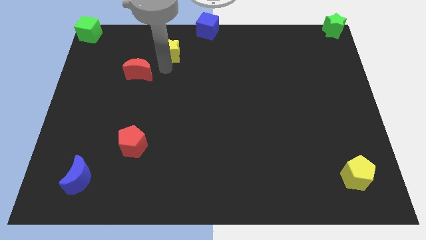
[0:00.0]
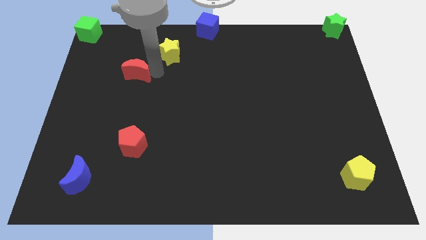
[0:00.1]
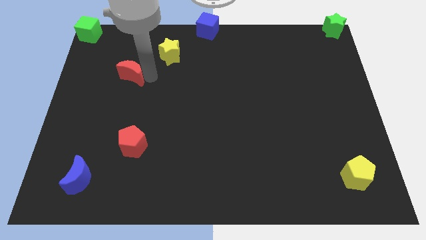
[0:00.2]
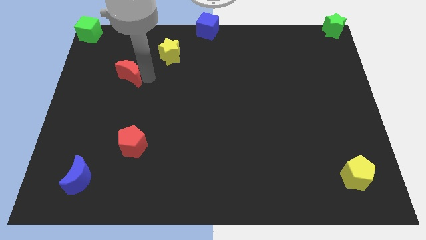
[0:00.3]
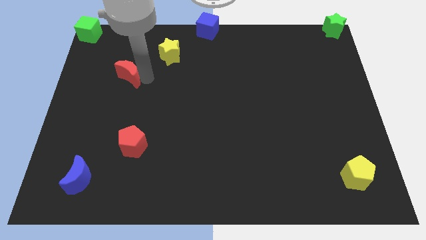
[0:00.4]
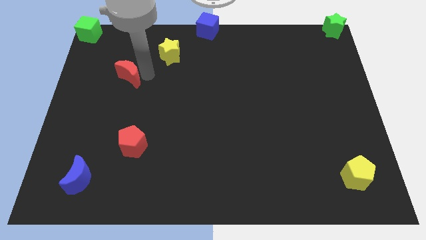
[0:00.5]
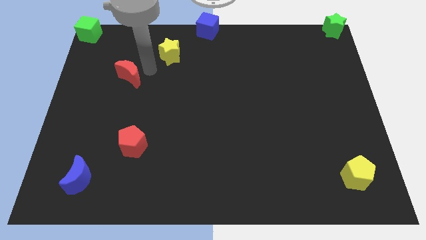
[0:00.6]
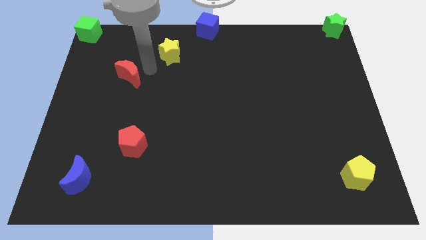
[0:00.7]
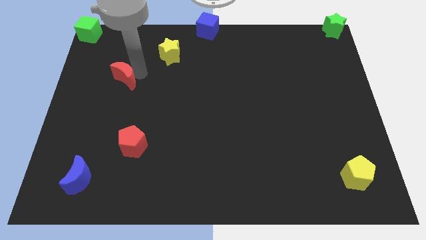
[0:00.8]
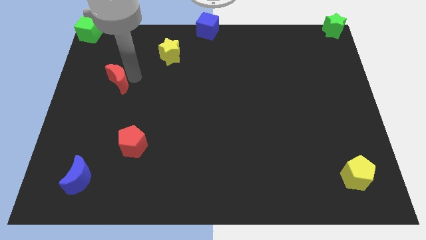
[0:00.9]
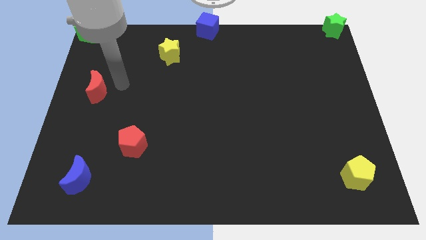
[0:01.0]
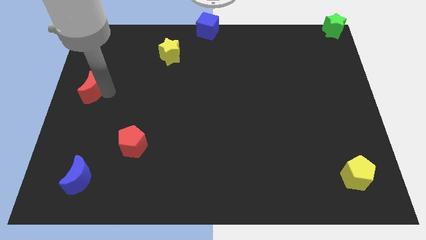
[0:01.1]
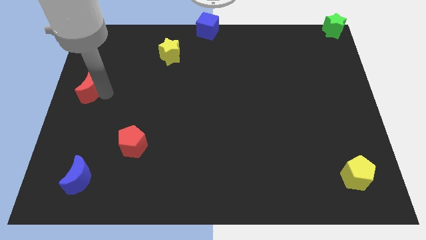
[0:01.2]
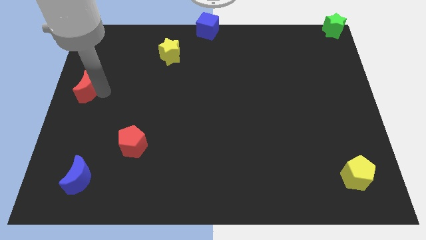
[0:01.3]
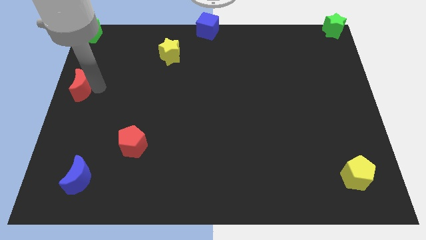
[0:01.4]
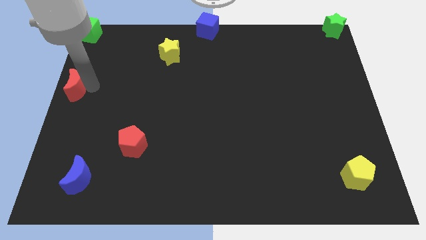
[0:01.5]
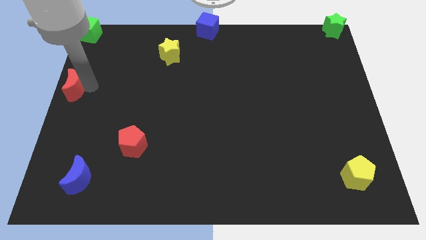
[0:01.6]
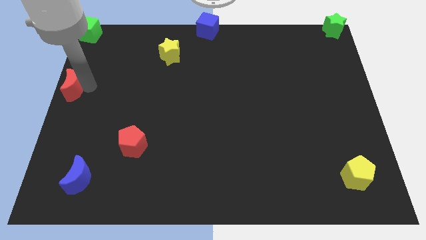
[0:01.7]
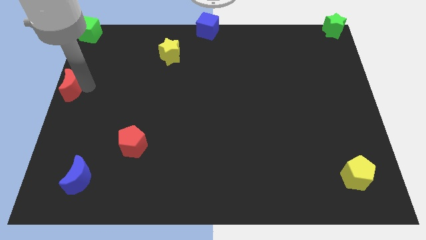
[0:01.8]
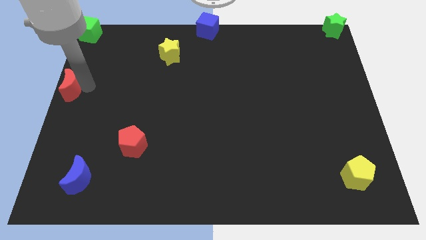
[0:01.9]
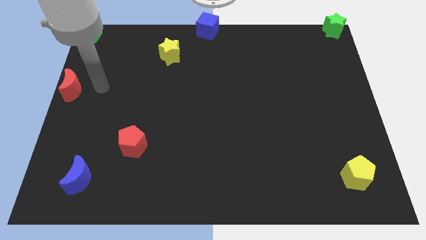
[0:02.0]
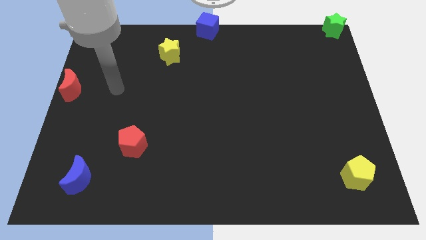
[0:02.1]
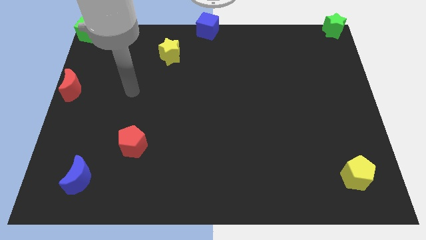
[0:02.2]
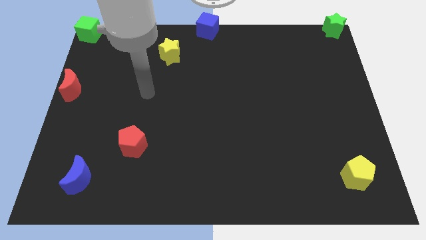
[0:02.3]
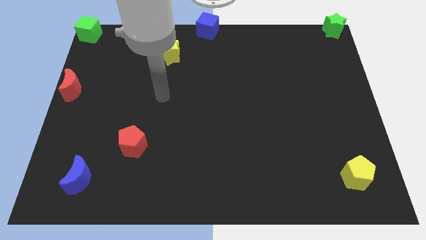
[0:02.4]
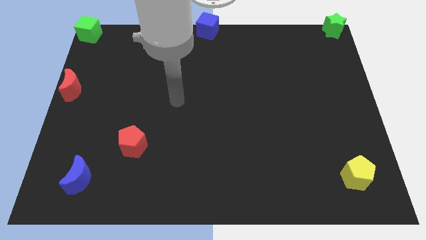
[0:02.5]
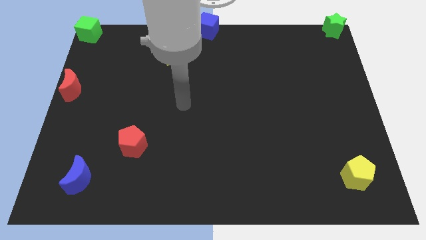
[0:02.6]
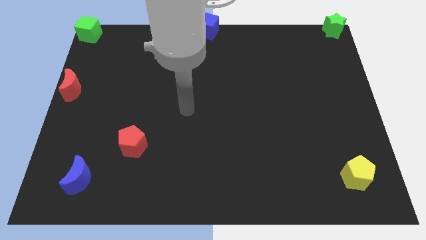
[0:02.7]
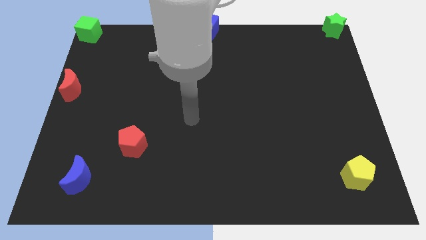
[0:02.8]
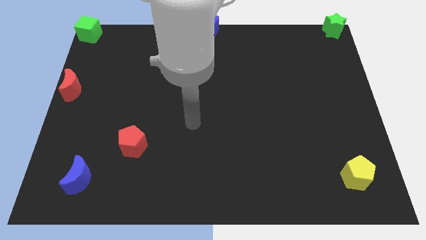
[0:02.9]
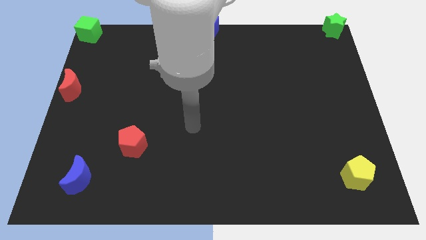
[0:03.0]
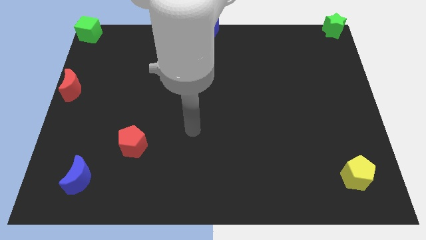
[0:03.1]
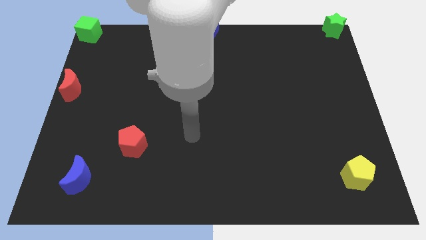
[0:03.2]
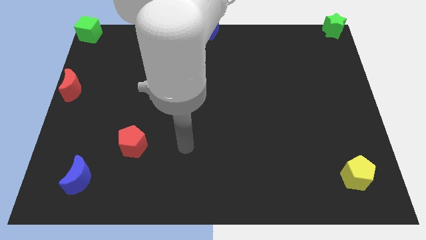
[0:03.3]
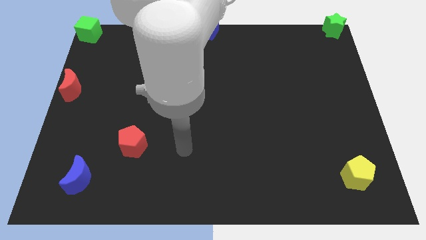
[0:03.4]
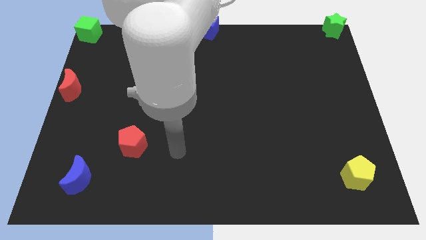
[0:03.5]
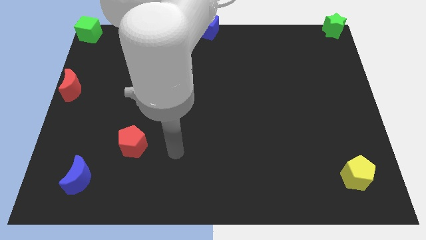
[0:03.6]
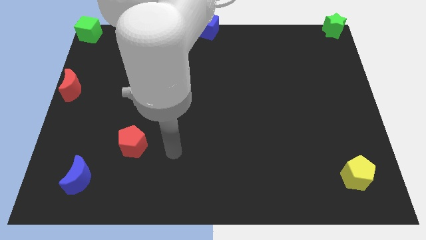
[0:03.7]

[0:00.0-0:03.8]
push the red crescent towards the left middle of the board

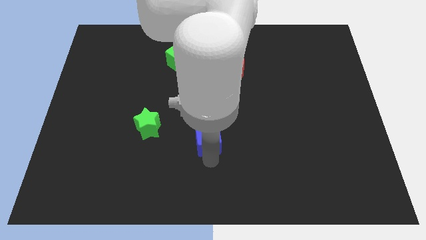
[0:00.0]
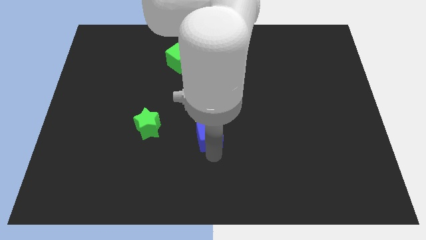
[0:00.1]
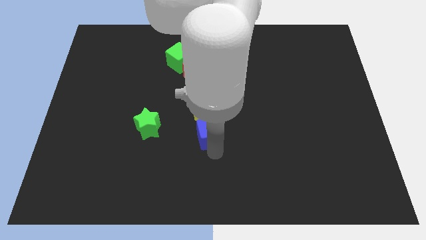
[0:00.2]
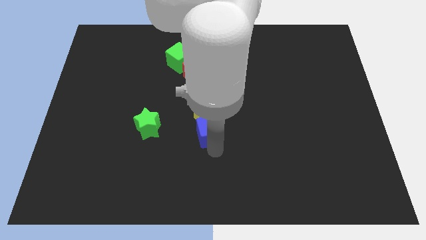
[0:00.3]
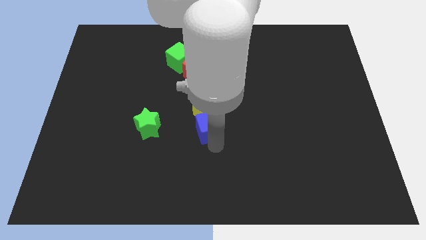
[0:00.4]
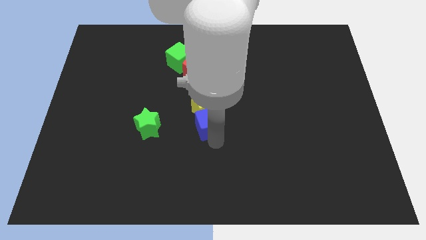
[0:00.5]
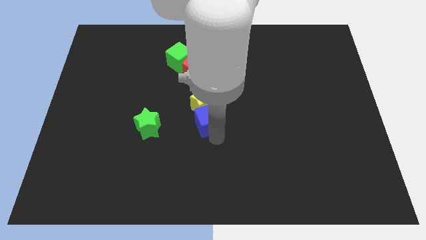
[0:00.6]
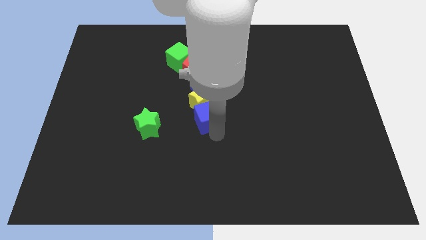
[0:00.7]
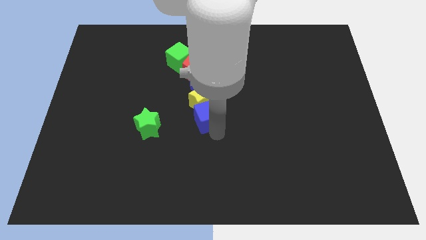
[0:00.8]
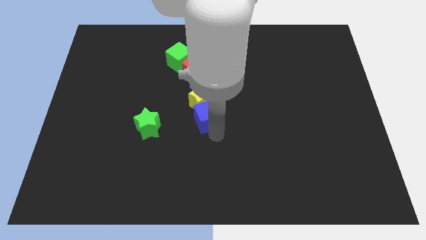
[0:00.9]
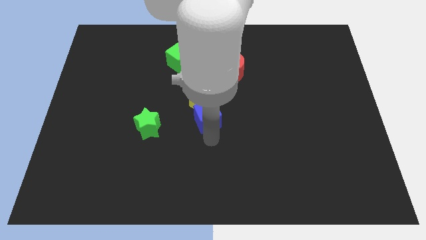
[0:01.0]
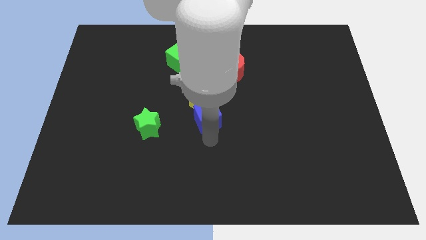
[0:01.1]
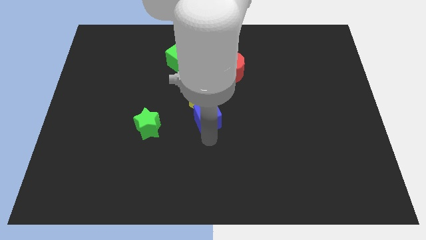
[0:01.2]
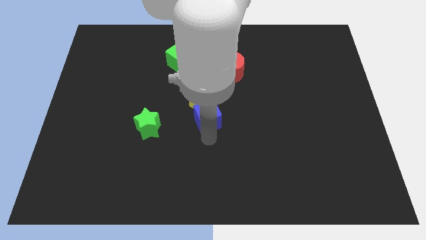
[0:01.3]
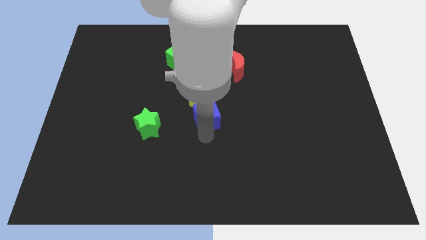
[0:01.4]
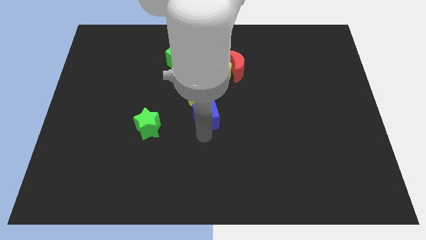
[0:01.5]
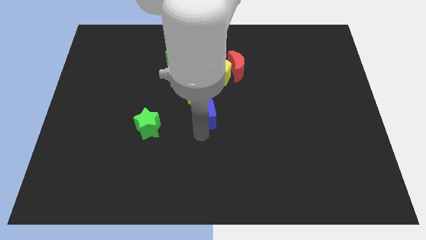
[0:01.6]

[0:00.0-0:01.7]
push the blue cube into the yellow star

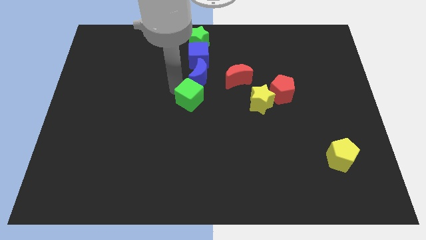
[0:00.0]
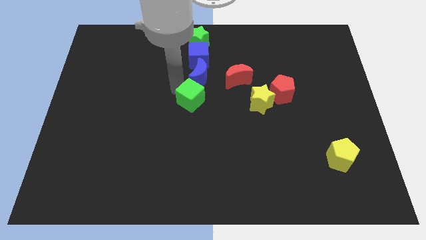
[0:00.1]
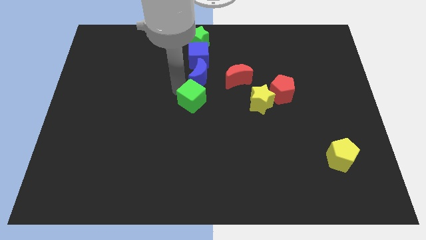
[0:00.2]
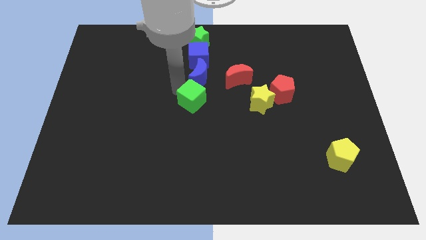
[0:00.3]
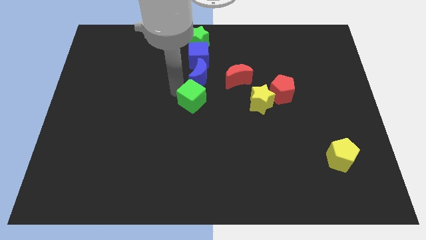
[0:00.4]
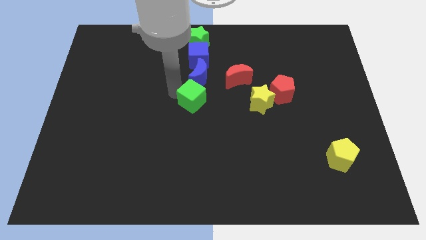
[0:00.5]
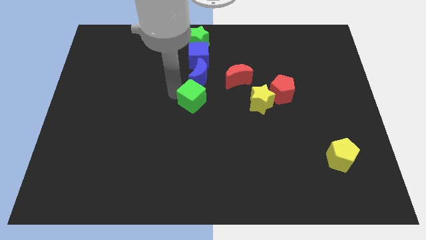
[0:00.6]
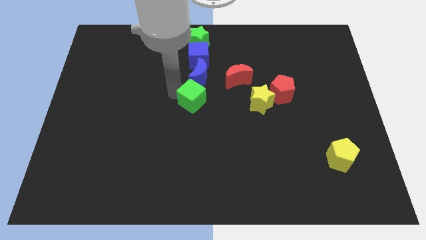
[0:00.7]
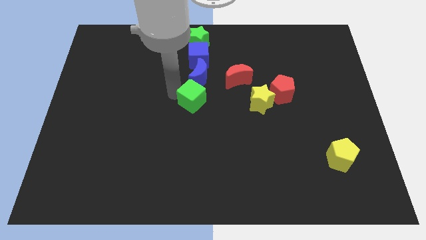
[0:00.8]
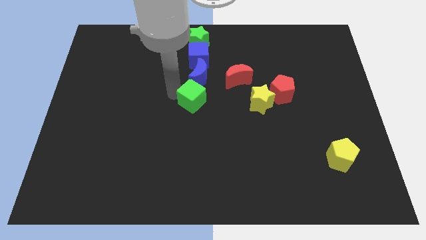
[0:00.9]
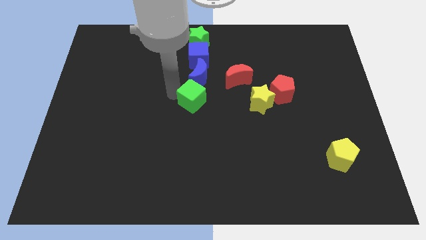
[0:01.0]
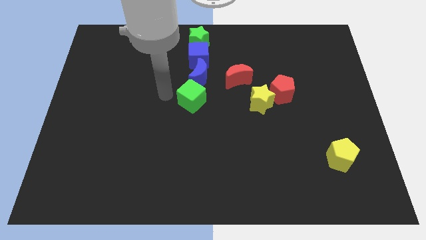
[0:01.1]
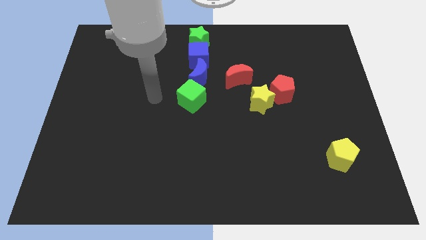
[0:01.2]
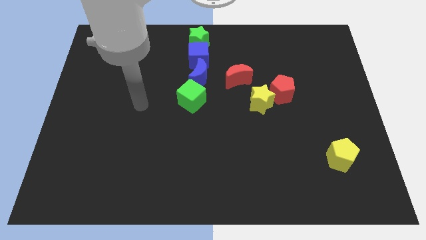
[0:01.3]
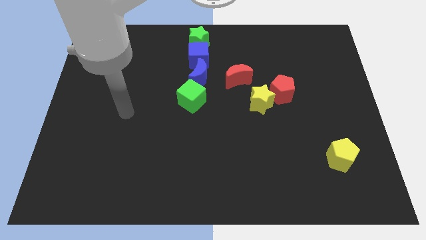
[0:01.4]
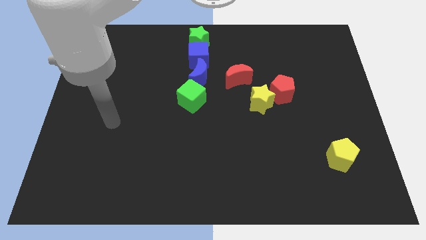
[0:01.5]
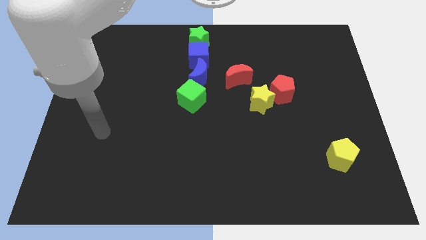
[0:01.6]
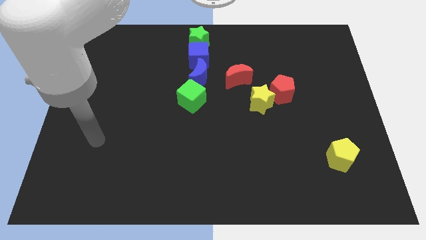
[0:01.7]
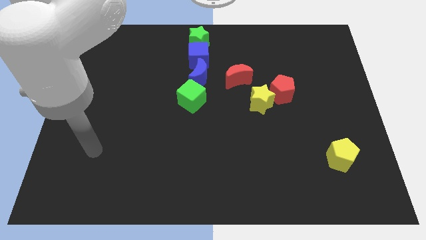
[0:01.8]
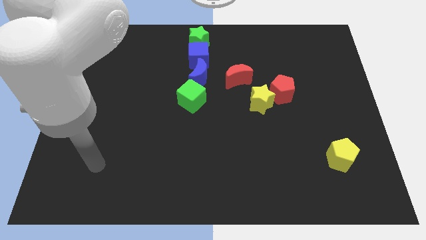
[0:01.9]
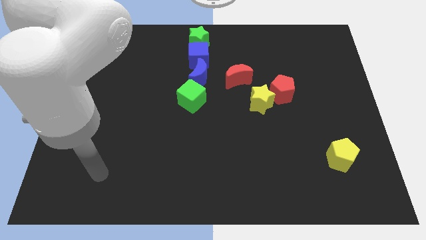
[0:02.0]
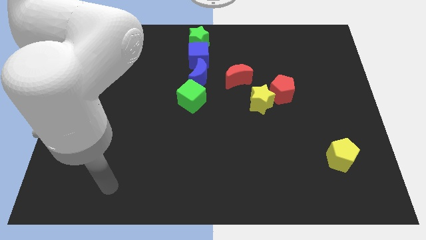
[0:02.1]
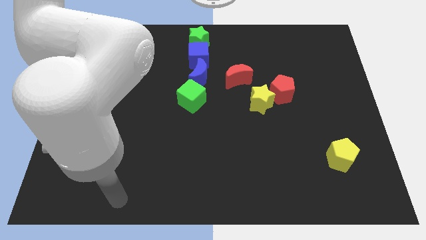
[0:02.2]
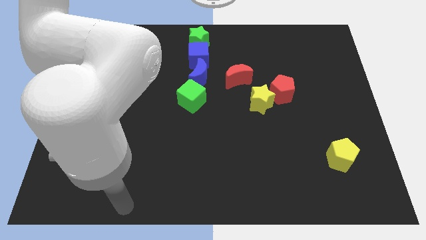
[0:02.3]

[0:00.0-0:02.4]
move the arm vertically down to the bottom center side

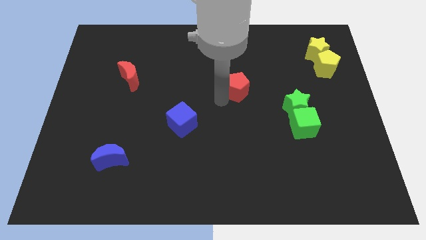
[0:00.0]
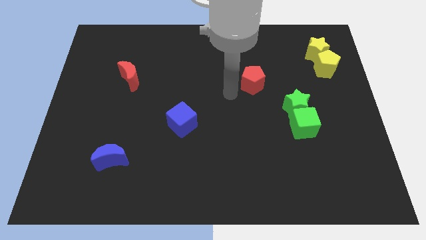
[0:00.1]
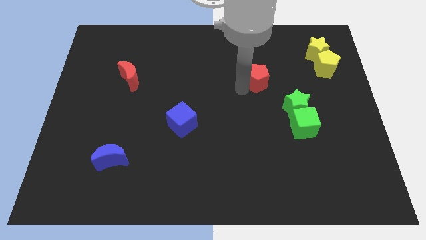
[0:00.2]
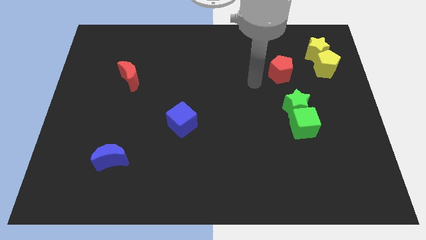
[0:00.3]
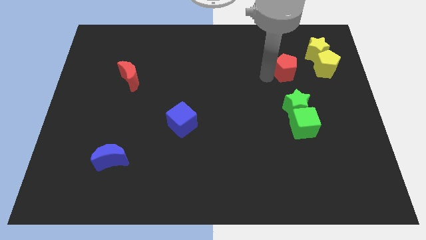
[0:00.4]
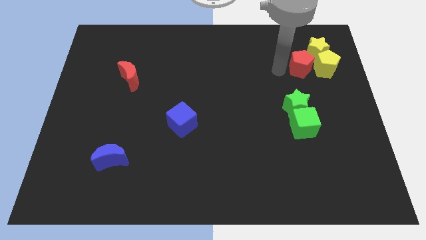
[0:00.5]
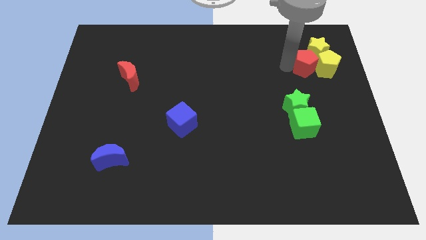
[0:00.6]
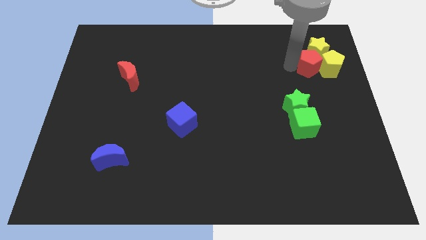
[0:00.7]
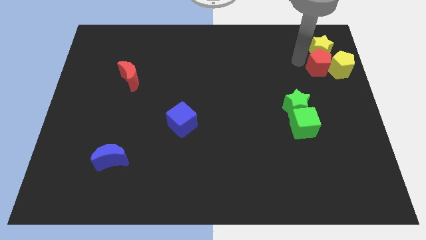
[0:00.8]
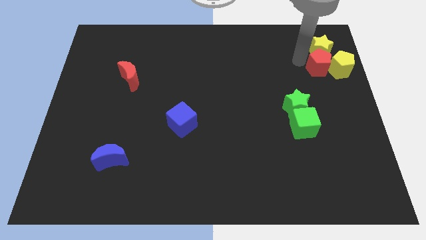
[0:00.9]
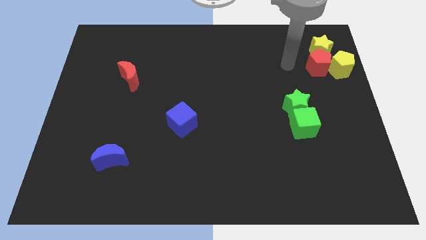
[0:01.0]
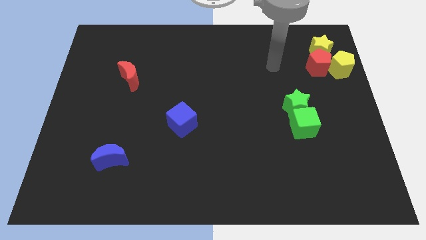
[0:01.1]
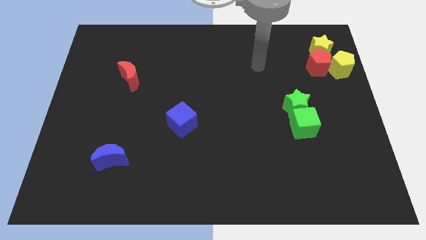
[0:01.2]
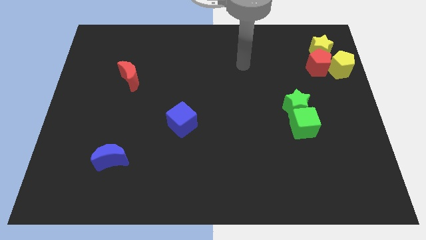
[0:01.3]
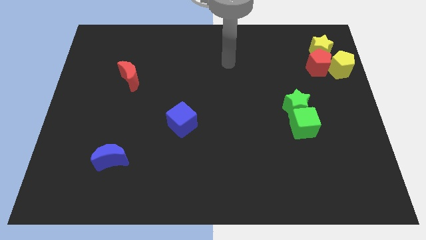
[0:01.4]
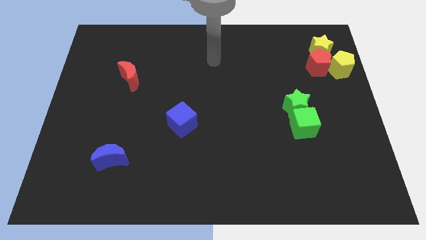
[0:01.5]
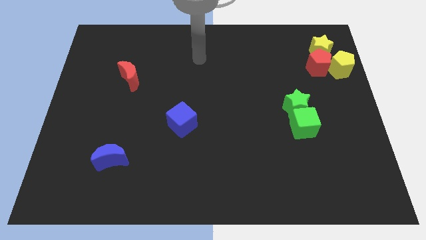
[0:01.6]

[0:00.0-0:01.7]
place the red pentagon beside the yellow pentagon
